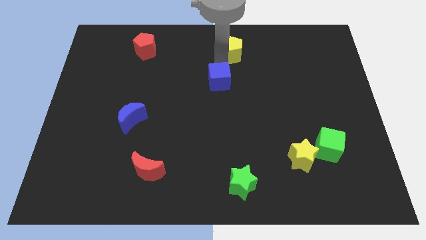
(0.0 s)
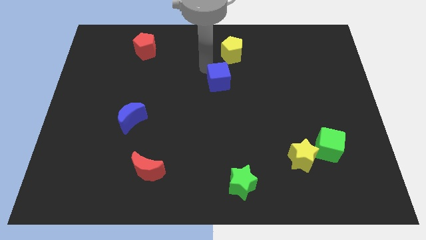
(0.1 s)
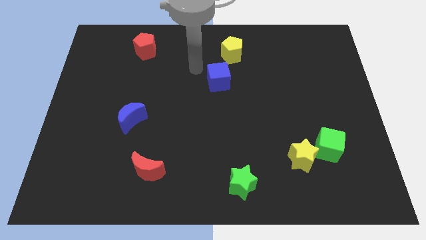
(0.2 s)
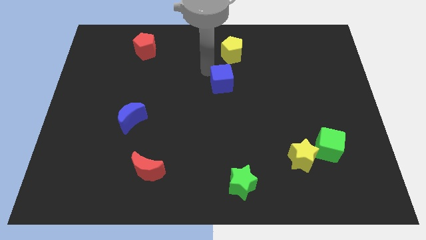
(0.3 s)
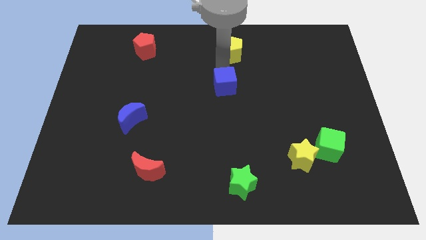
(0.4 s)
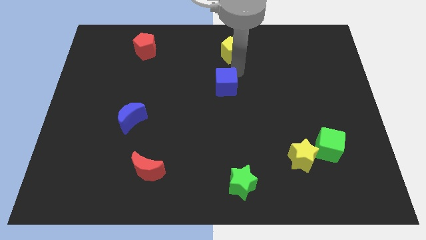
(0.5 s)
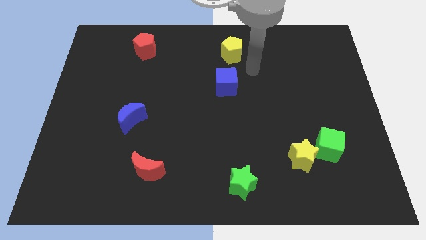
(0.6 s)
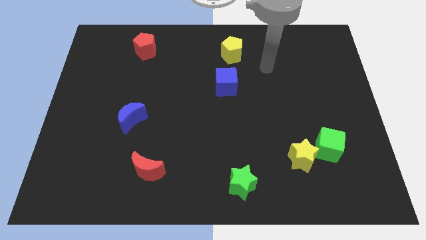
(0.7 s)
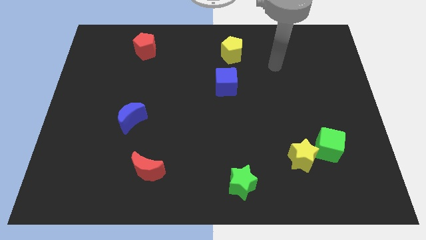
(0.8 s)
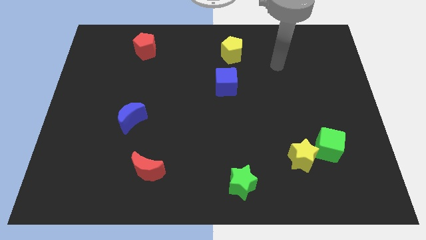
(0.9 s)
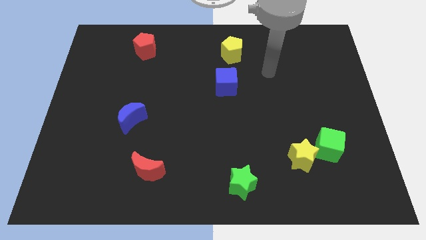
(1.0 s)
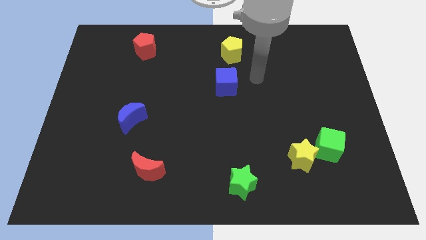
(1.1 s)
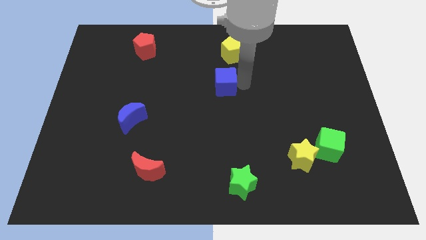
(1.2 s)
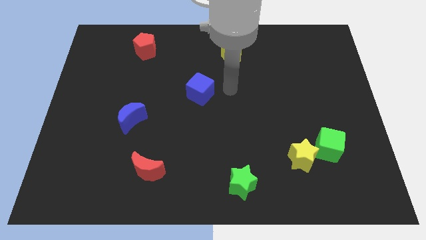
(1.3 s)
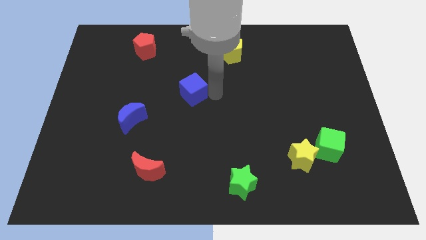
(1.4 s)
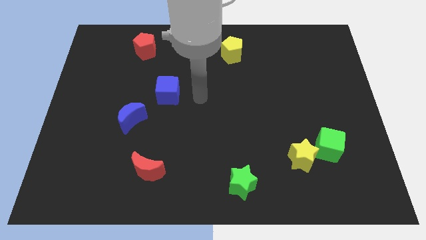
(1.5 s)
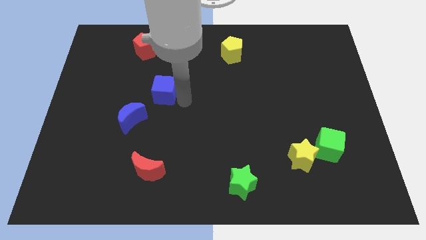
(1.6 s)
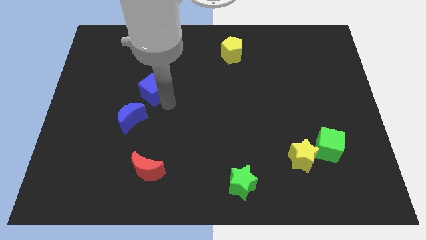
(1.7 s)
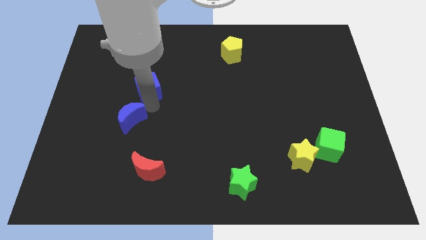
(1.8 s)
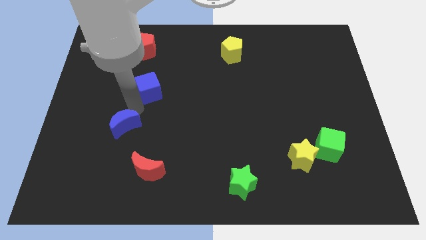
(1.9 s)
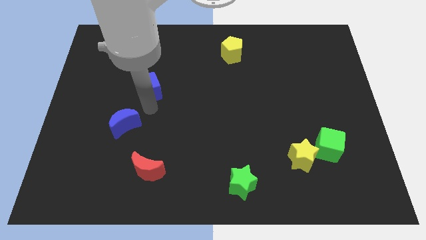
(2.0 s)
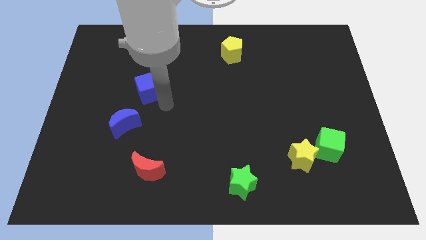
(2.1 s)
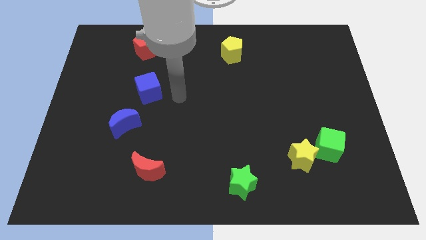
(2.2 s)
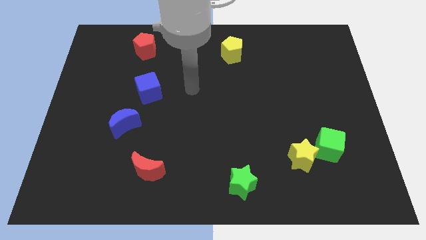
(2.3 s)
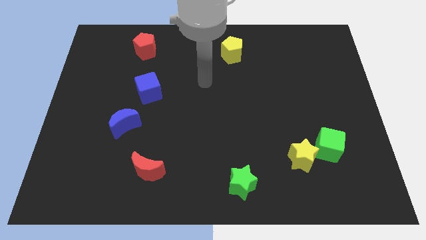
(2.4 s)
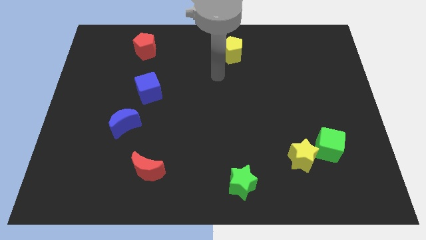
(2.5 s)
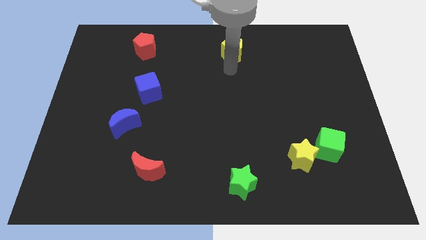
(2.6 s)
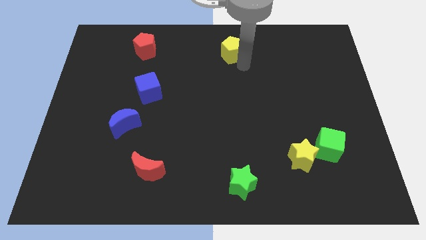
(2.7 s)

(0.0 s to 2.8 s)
place the blue cube below the red pentagon

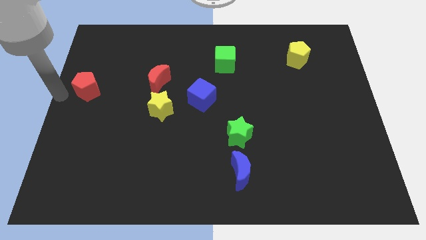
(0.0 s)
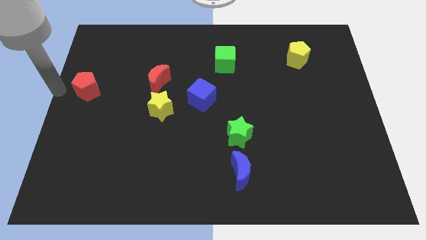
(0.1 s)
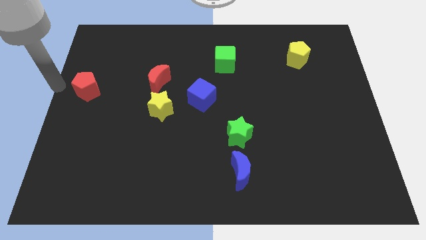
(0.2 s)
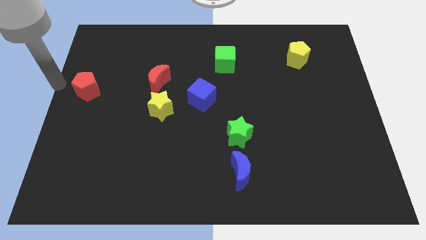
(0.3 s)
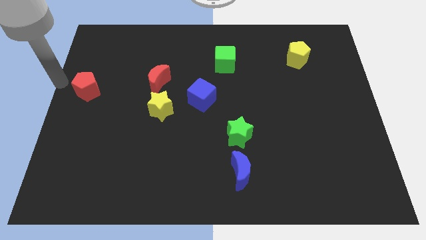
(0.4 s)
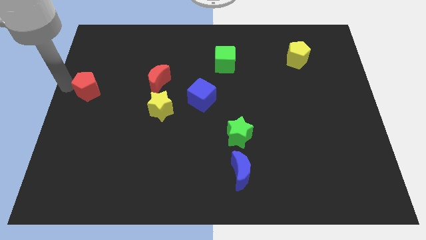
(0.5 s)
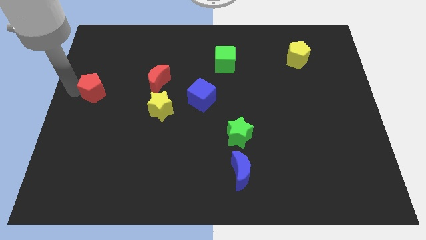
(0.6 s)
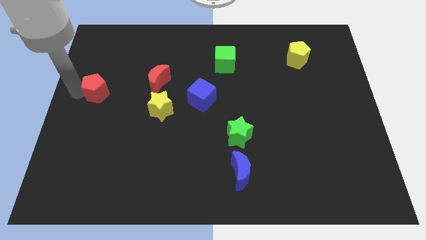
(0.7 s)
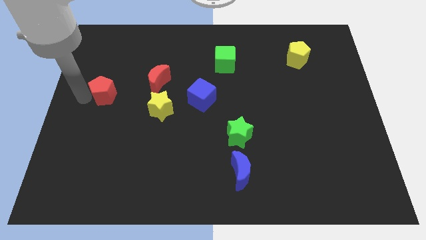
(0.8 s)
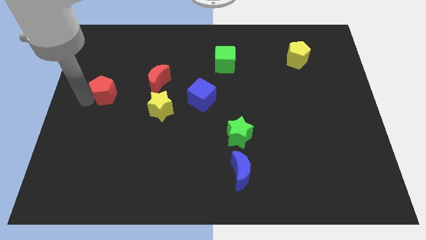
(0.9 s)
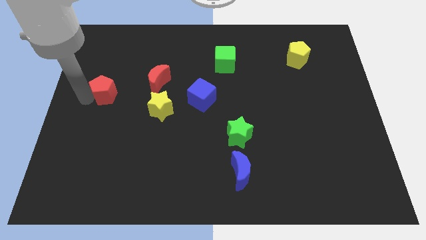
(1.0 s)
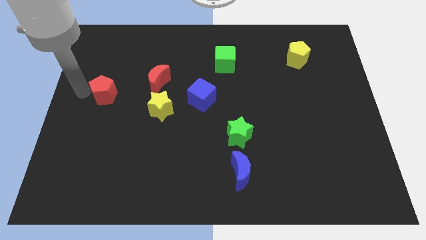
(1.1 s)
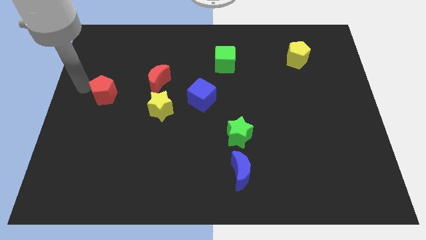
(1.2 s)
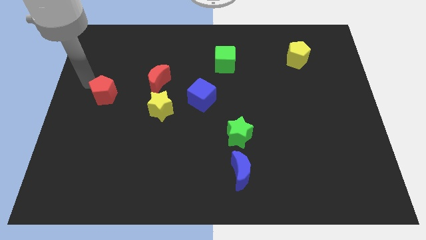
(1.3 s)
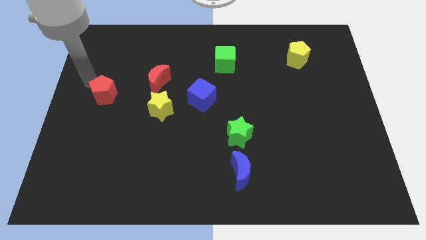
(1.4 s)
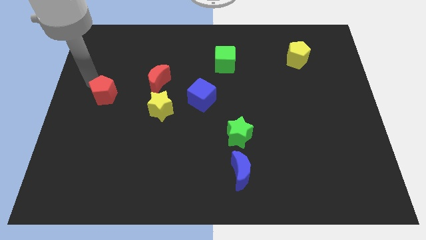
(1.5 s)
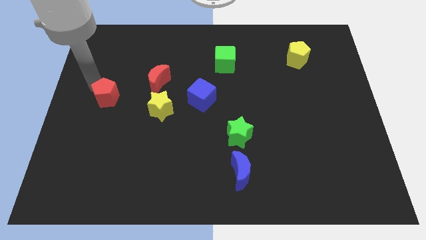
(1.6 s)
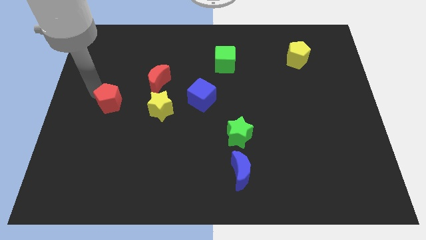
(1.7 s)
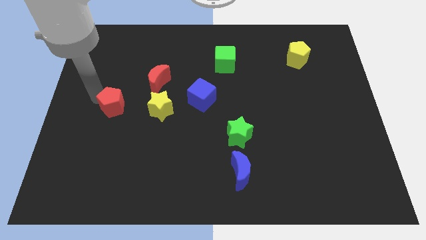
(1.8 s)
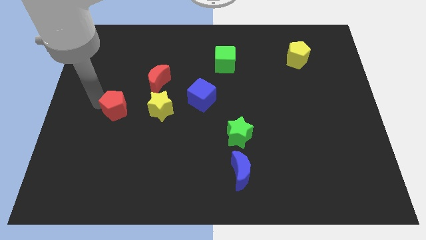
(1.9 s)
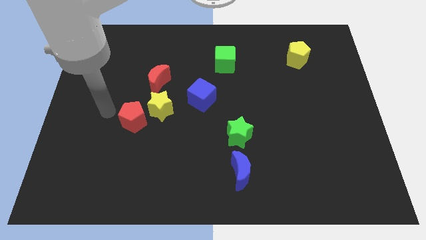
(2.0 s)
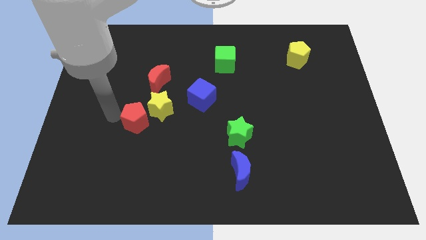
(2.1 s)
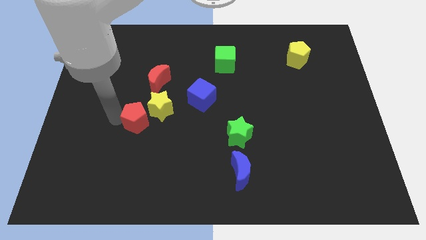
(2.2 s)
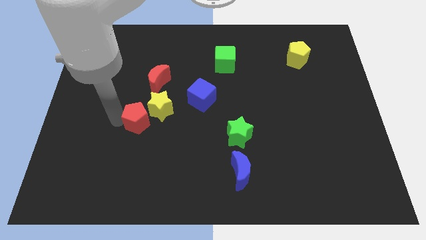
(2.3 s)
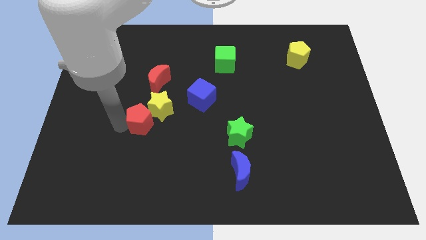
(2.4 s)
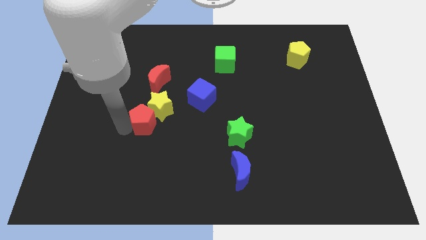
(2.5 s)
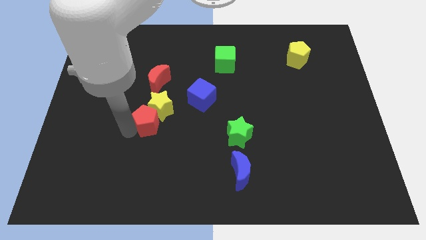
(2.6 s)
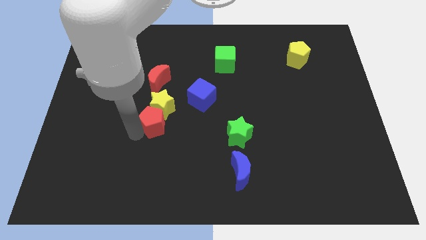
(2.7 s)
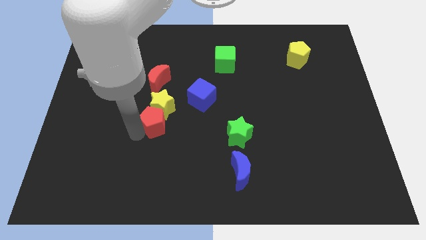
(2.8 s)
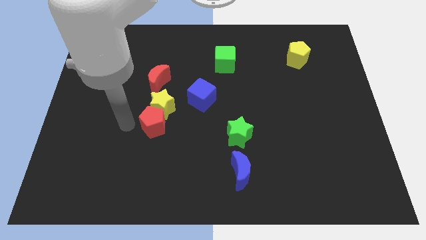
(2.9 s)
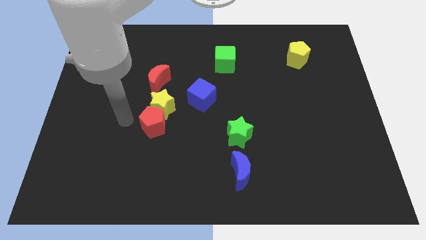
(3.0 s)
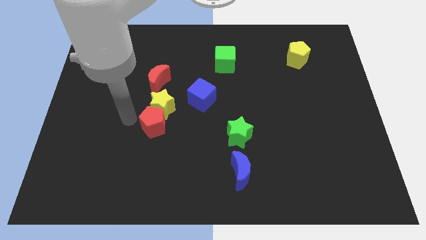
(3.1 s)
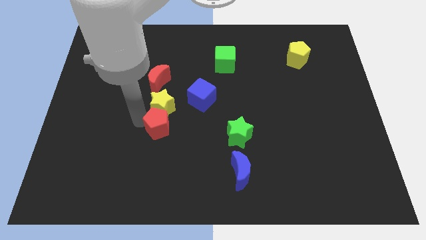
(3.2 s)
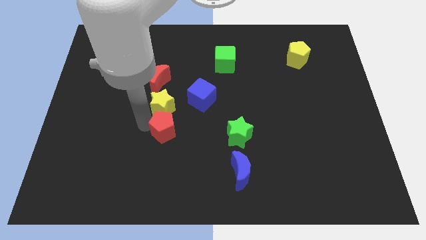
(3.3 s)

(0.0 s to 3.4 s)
move the red pentagon below yellow star

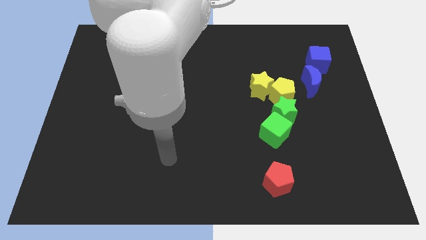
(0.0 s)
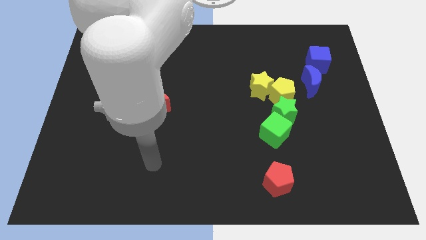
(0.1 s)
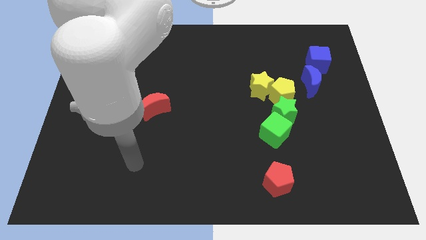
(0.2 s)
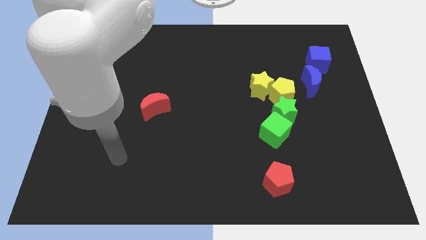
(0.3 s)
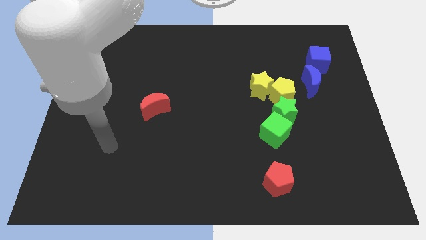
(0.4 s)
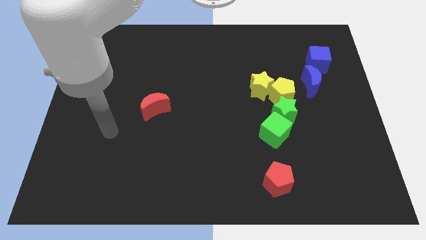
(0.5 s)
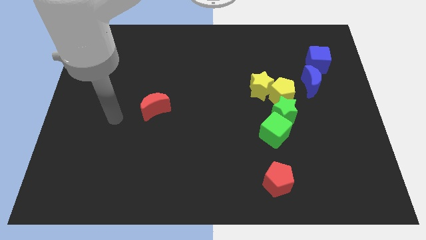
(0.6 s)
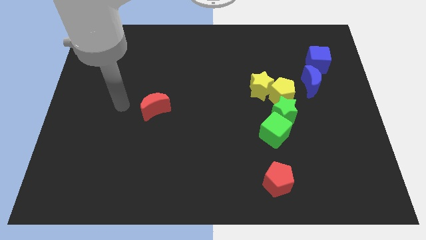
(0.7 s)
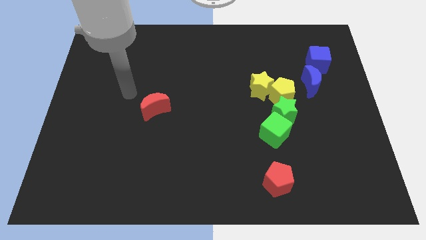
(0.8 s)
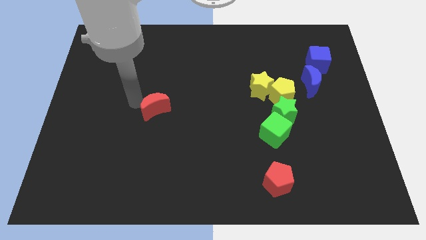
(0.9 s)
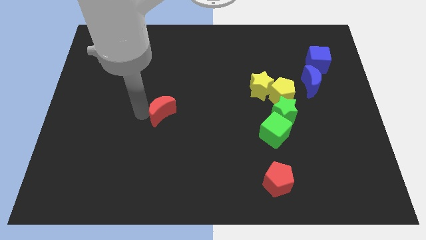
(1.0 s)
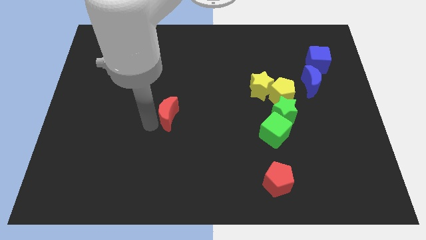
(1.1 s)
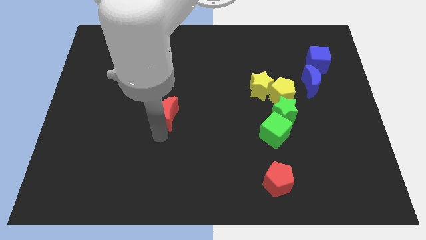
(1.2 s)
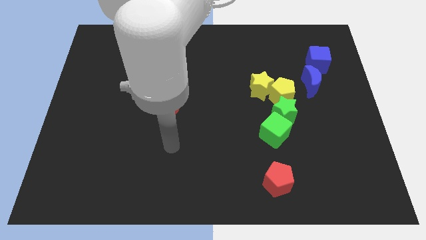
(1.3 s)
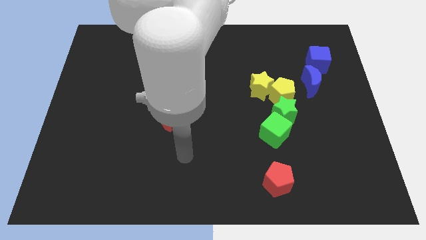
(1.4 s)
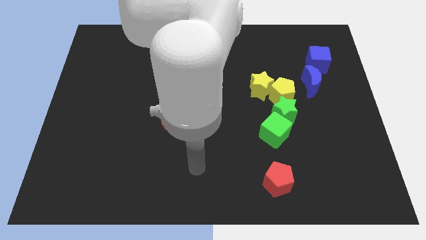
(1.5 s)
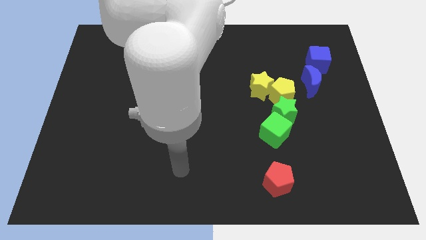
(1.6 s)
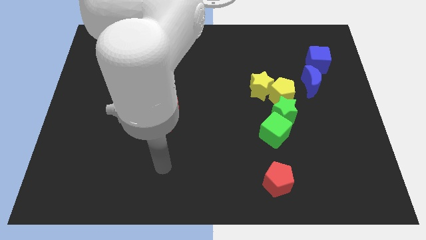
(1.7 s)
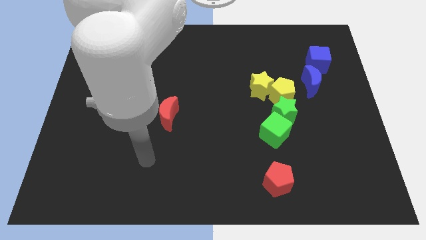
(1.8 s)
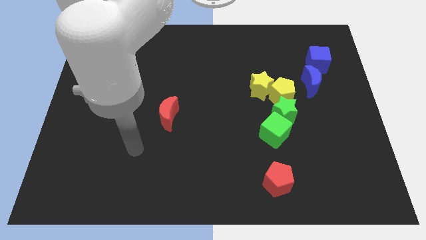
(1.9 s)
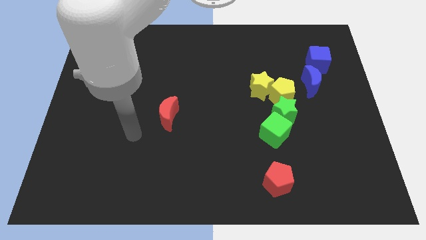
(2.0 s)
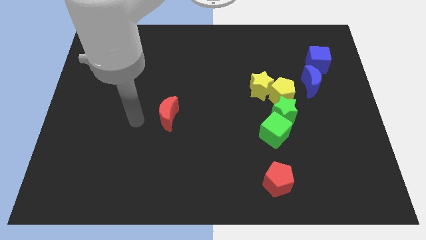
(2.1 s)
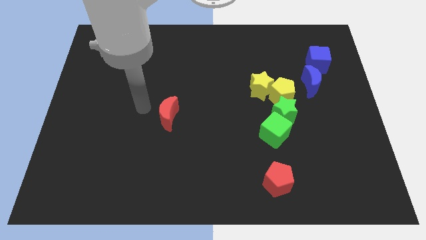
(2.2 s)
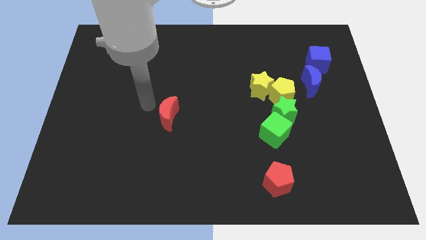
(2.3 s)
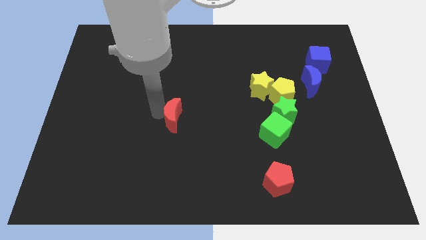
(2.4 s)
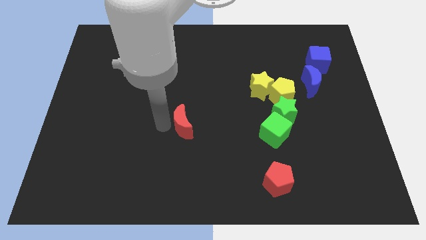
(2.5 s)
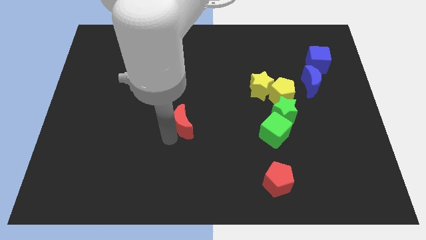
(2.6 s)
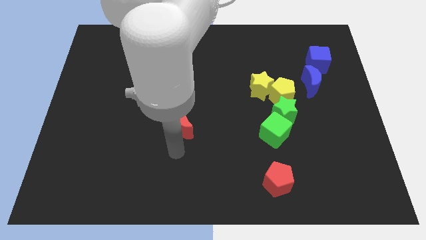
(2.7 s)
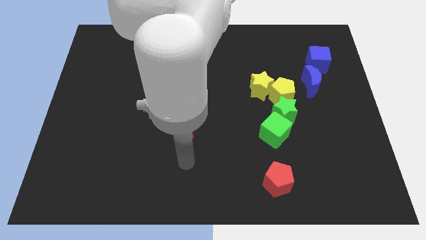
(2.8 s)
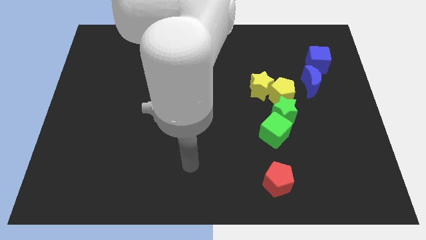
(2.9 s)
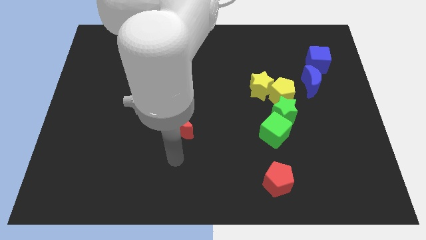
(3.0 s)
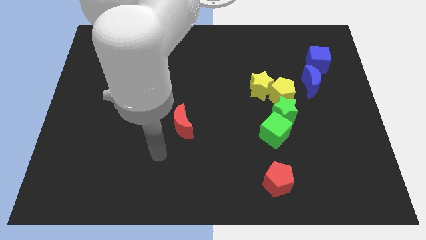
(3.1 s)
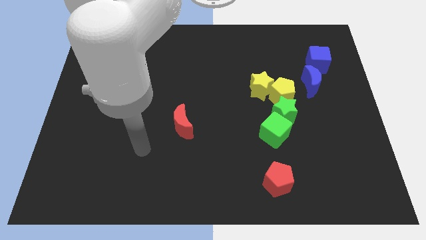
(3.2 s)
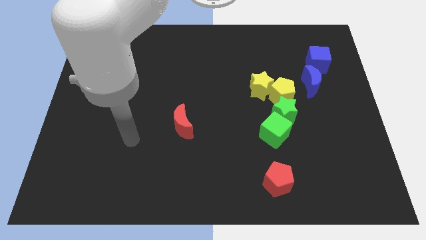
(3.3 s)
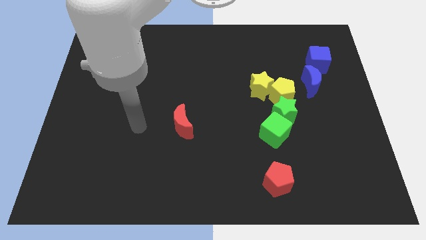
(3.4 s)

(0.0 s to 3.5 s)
move the red crescent parallel left to the green cube
